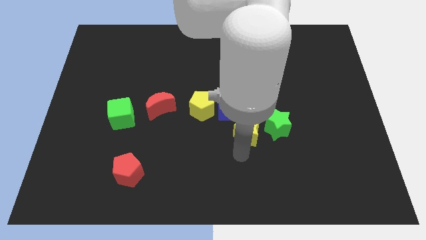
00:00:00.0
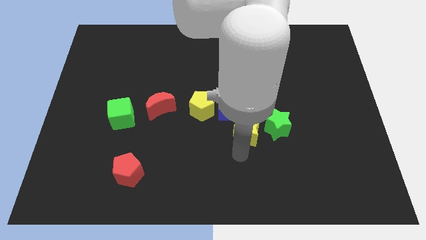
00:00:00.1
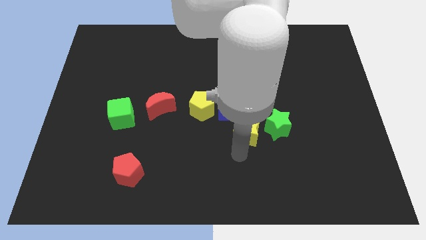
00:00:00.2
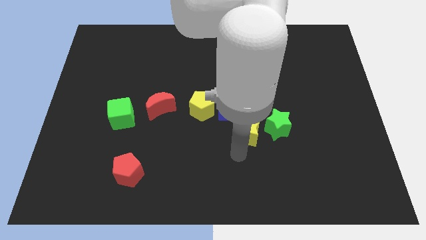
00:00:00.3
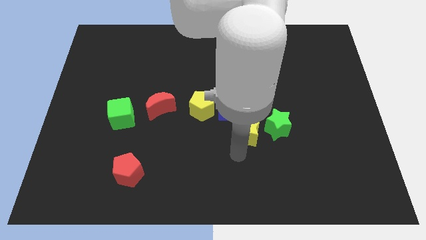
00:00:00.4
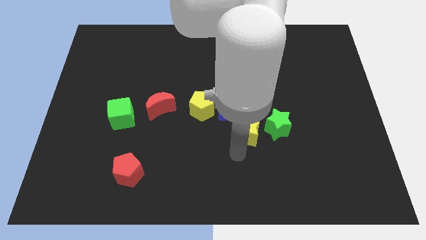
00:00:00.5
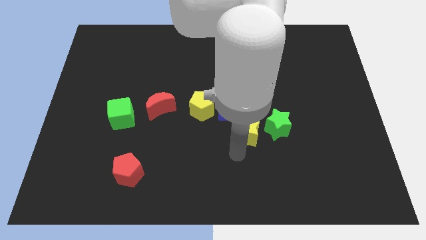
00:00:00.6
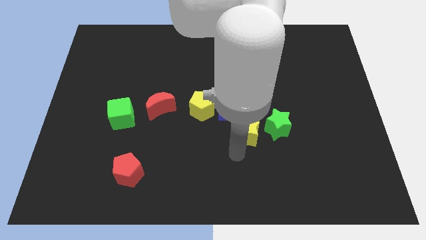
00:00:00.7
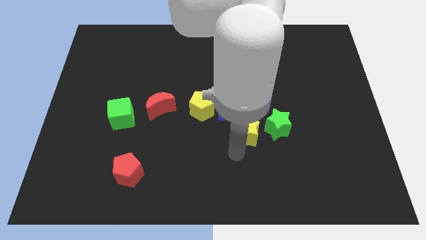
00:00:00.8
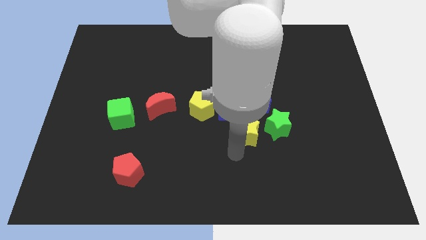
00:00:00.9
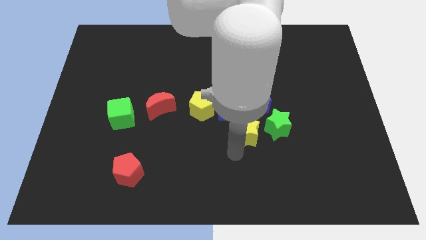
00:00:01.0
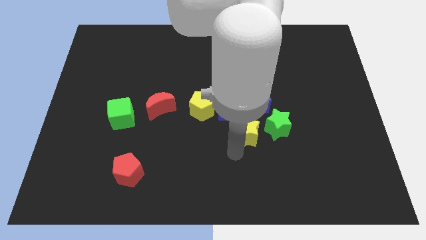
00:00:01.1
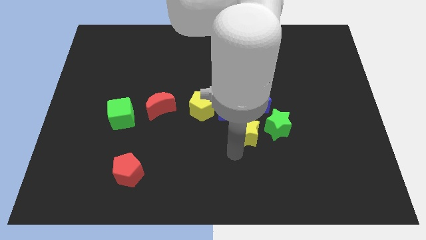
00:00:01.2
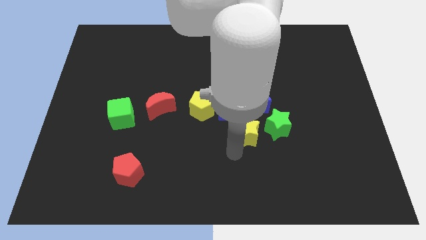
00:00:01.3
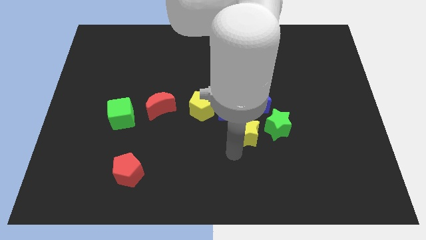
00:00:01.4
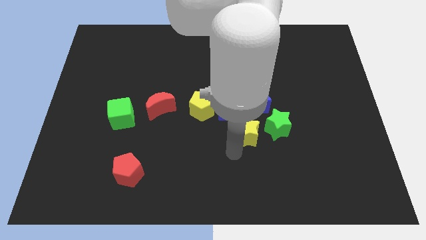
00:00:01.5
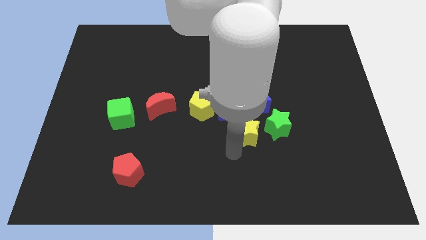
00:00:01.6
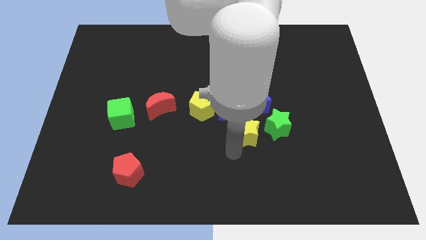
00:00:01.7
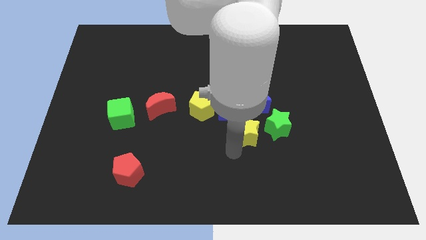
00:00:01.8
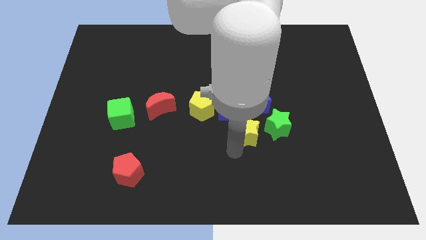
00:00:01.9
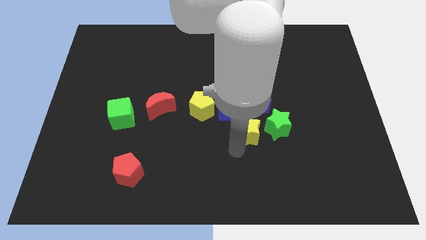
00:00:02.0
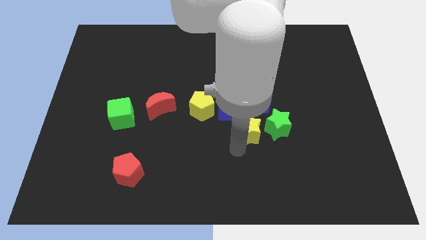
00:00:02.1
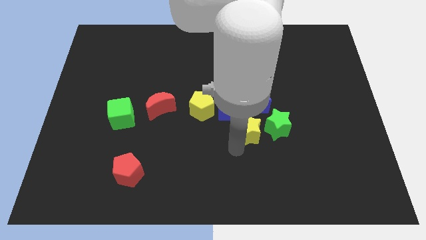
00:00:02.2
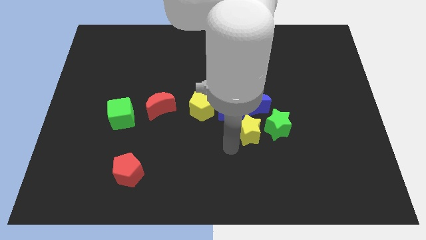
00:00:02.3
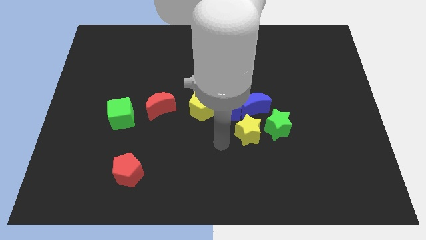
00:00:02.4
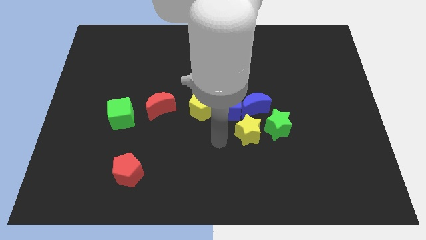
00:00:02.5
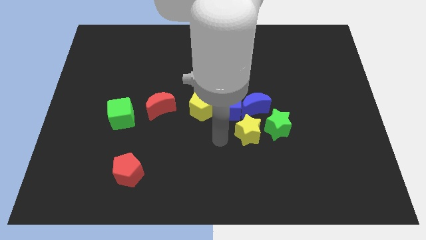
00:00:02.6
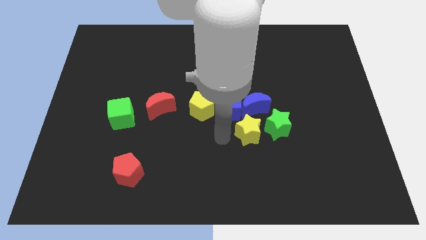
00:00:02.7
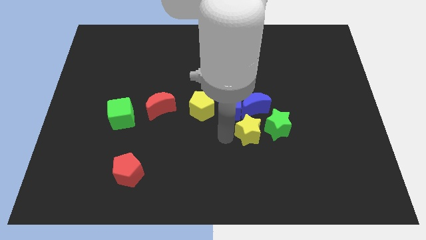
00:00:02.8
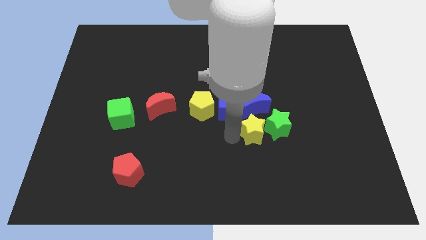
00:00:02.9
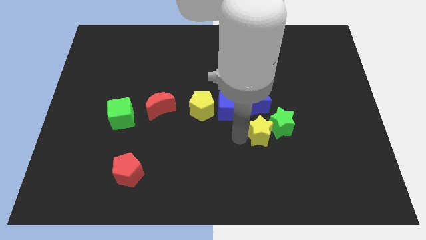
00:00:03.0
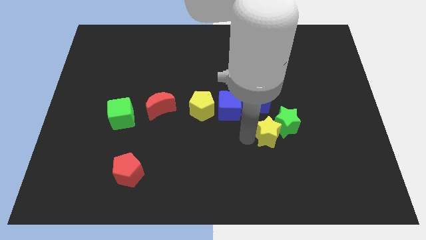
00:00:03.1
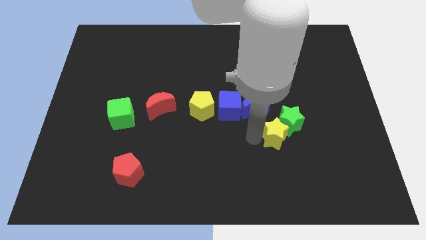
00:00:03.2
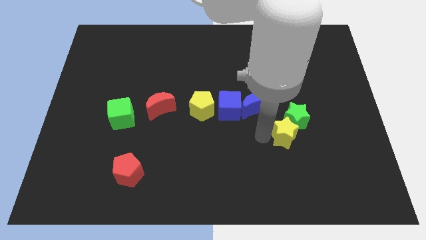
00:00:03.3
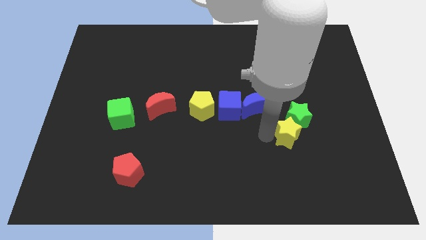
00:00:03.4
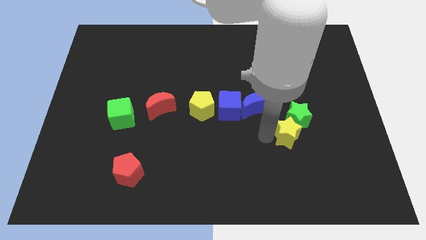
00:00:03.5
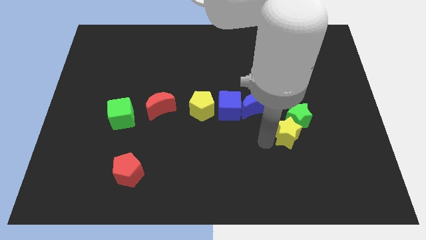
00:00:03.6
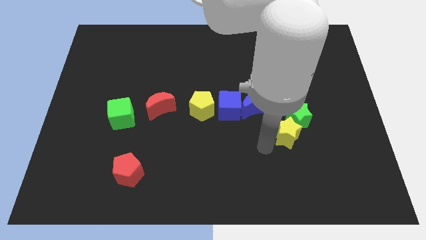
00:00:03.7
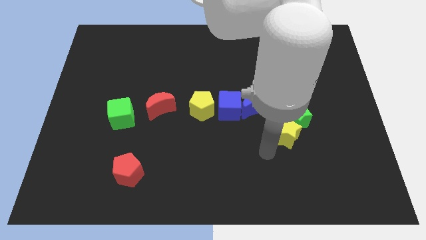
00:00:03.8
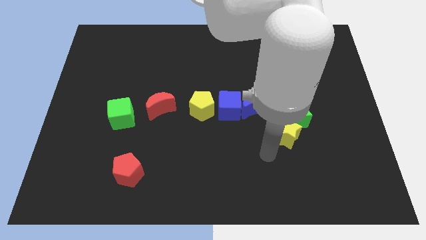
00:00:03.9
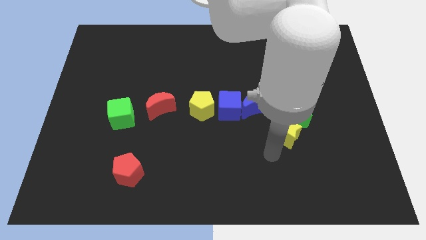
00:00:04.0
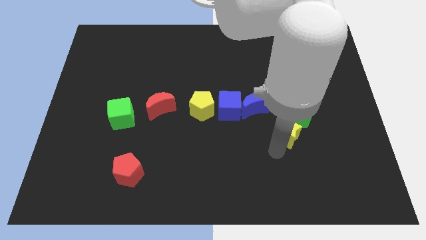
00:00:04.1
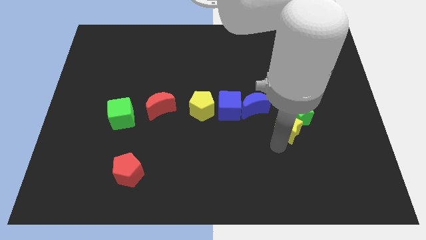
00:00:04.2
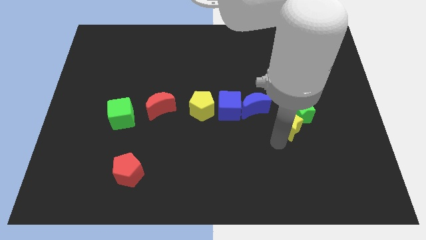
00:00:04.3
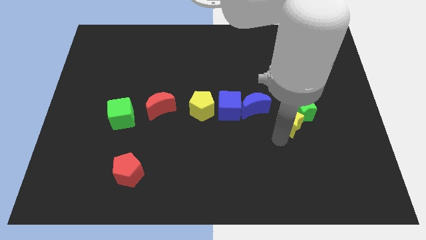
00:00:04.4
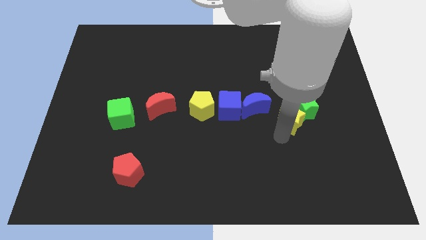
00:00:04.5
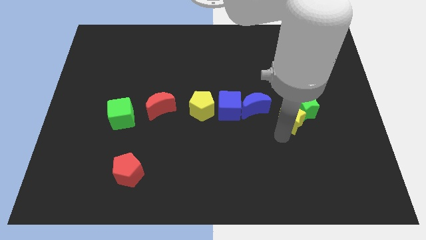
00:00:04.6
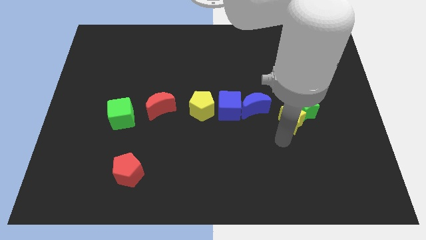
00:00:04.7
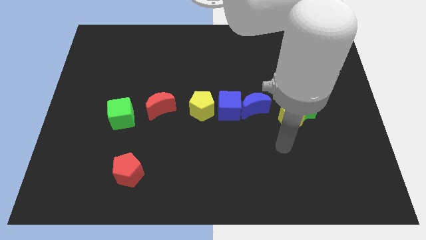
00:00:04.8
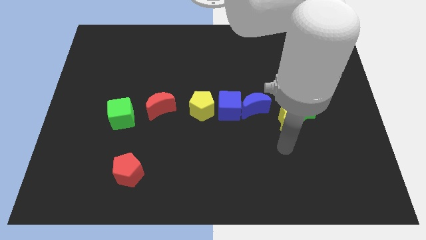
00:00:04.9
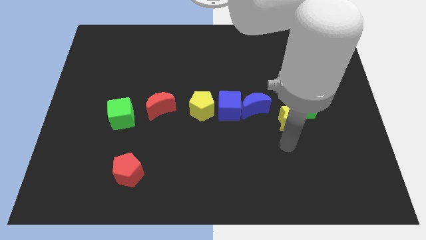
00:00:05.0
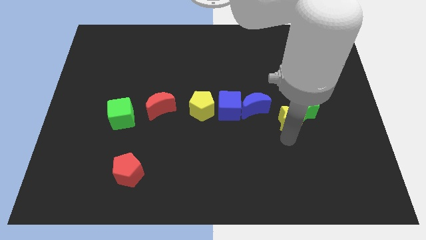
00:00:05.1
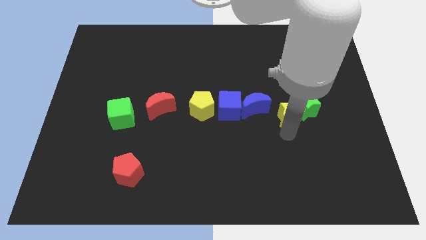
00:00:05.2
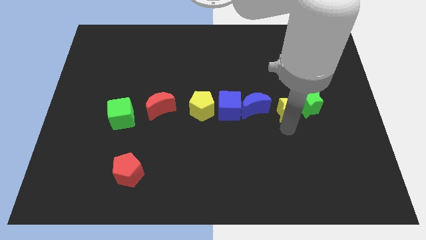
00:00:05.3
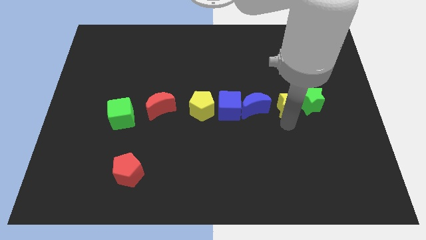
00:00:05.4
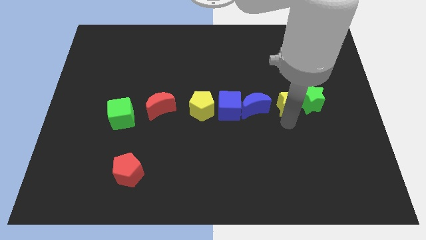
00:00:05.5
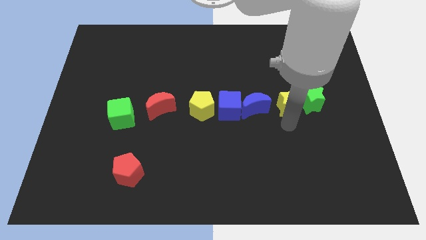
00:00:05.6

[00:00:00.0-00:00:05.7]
place the yellow and green stars to the right of the blue crescent

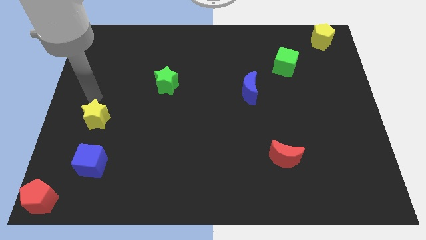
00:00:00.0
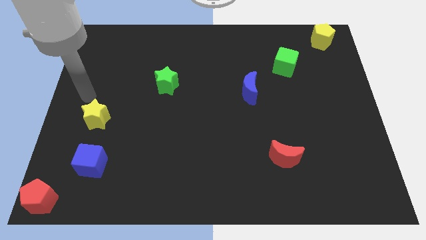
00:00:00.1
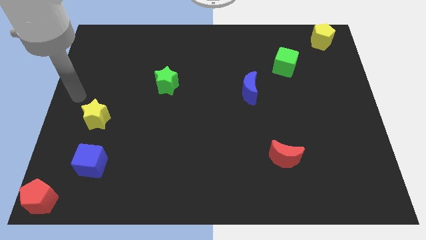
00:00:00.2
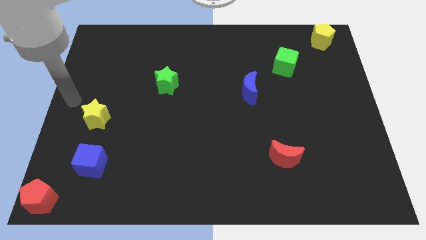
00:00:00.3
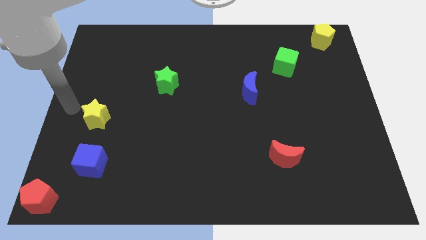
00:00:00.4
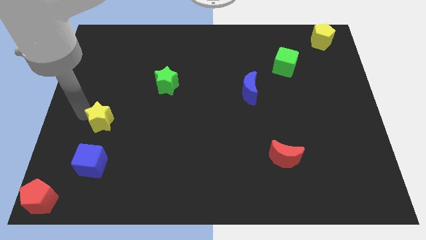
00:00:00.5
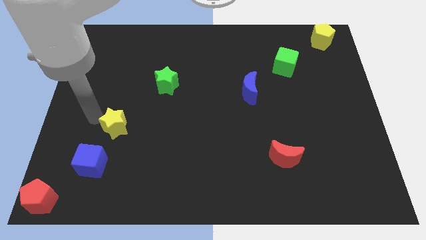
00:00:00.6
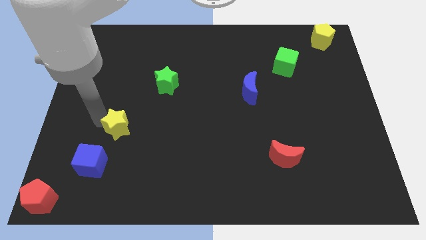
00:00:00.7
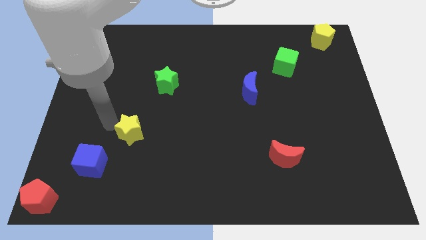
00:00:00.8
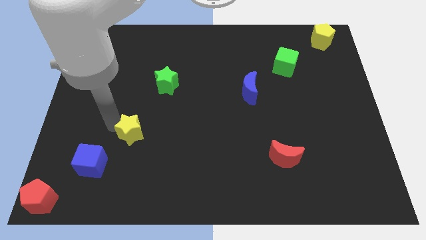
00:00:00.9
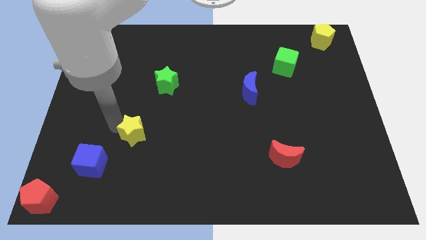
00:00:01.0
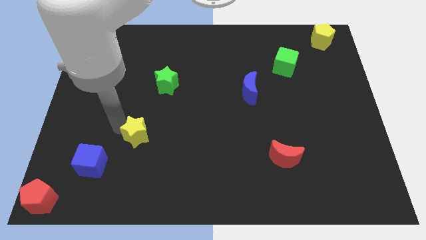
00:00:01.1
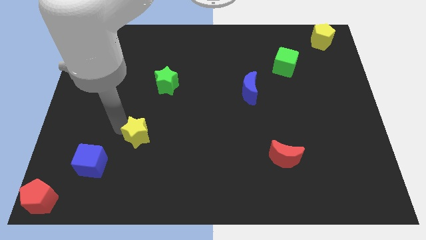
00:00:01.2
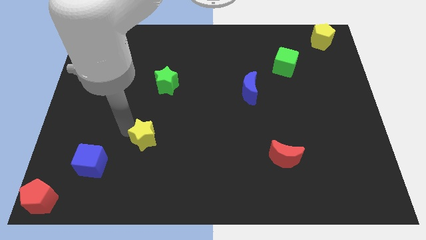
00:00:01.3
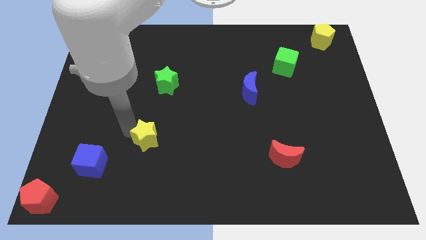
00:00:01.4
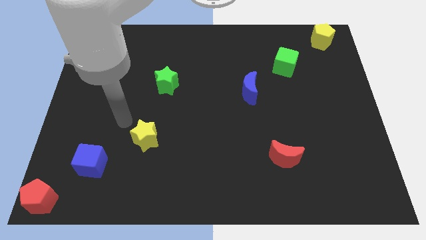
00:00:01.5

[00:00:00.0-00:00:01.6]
place the yellow star diagonally above the top right side of the blue cube

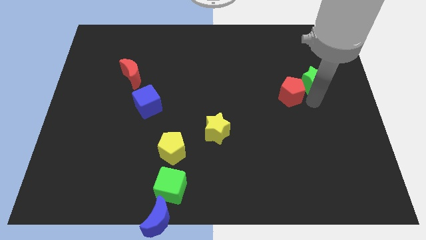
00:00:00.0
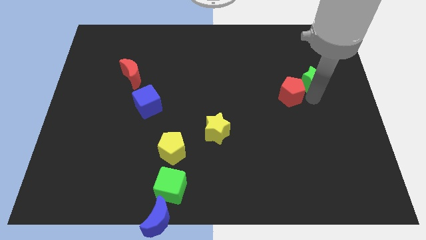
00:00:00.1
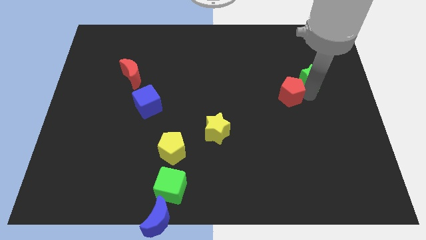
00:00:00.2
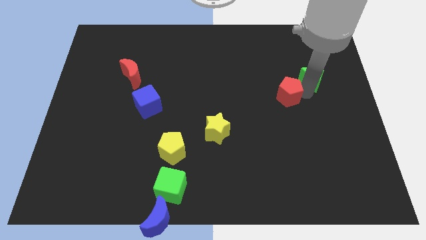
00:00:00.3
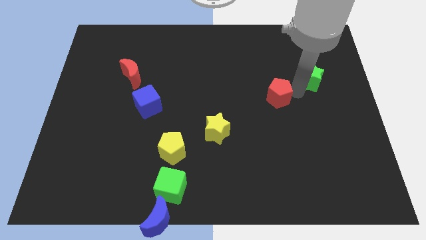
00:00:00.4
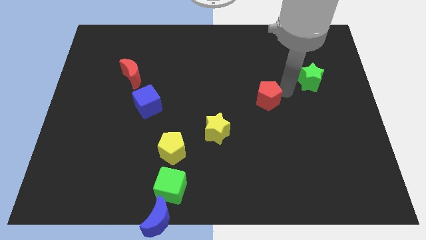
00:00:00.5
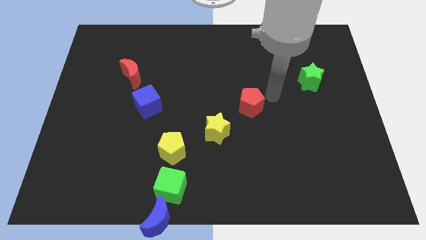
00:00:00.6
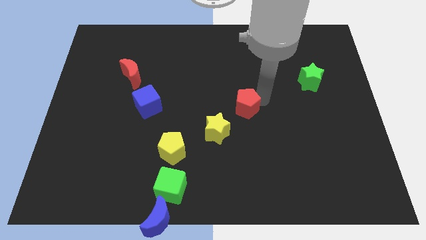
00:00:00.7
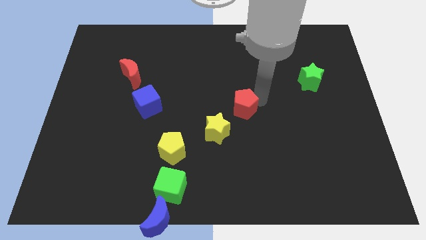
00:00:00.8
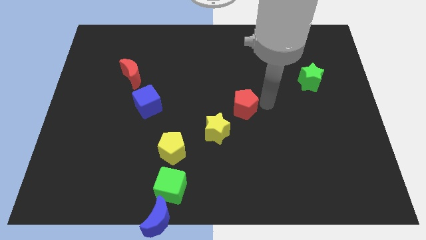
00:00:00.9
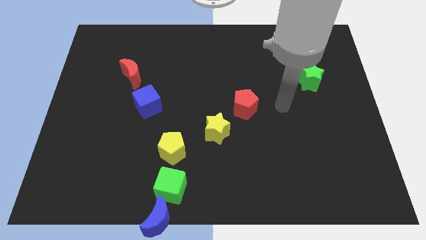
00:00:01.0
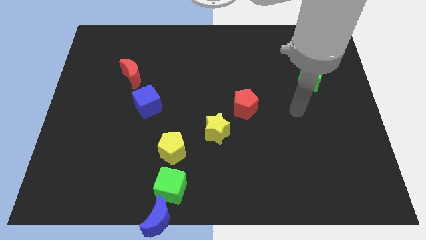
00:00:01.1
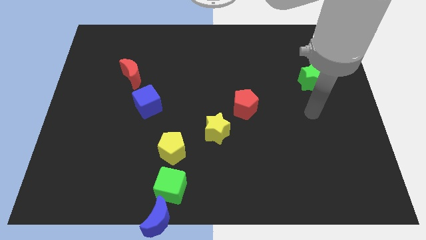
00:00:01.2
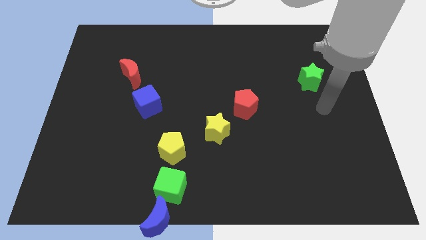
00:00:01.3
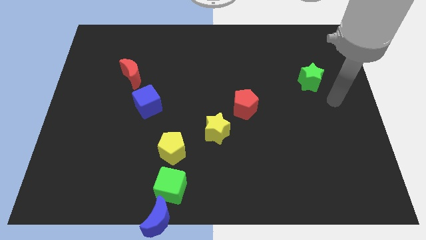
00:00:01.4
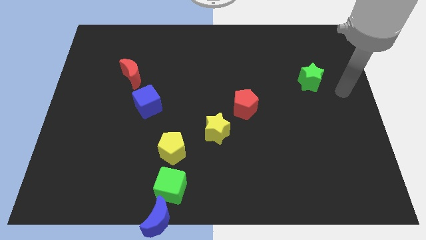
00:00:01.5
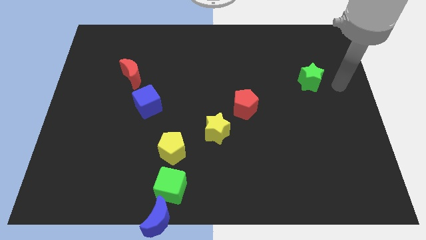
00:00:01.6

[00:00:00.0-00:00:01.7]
place the red pentagon diagonally to the yellow star
